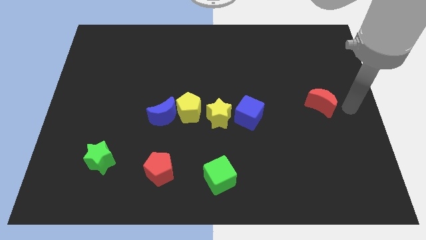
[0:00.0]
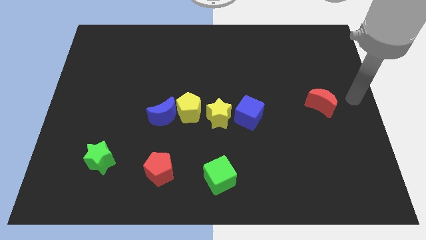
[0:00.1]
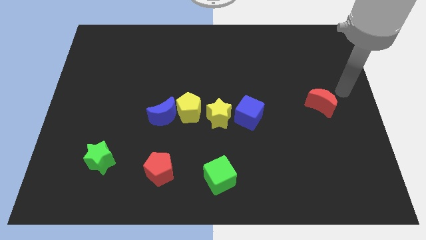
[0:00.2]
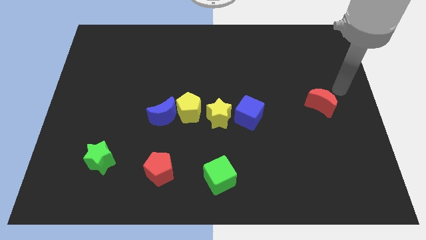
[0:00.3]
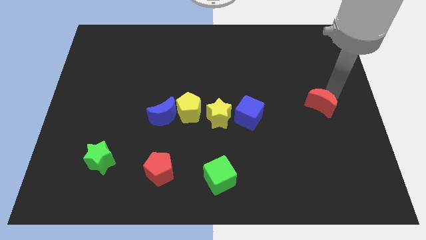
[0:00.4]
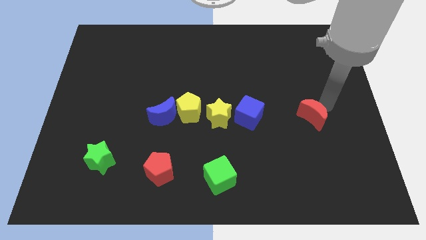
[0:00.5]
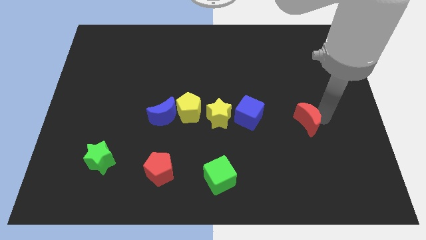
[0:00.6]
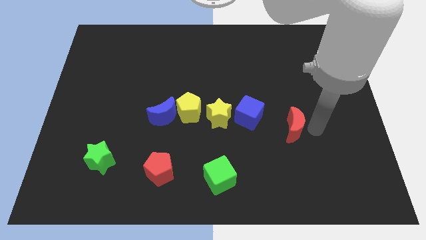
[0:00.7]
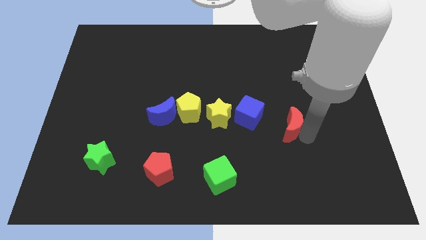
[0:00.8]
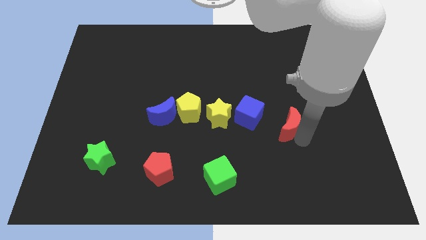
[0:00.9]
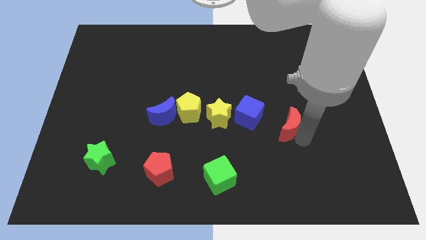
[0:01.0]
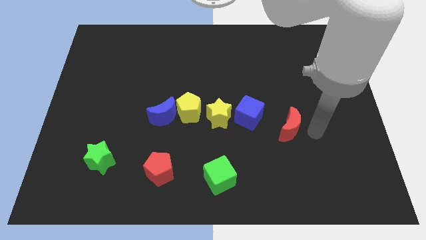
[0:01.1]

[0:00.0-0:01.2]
push the red crescent to the right of the blue cube

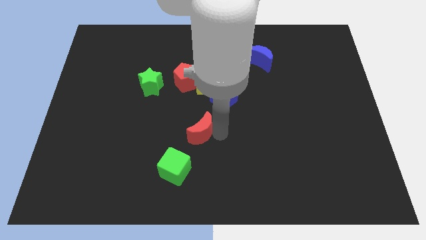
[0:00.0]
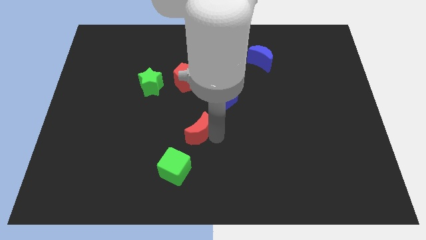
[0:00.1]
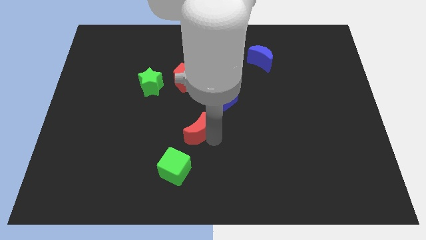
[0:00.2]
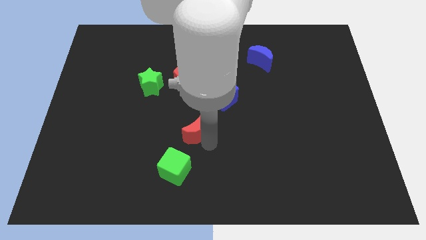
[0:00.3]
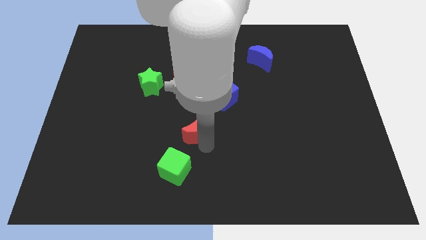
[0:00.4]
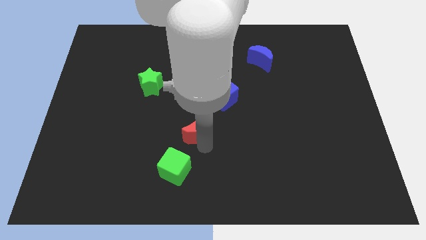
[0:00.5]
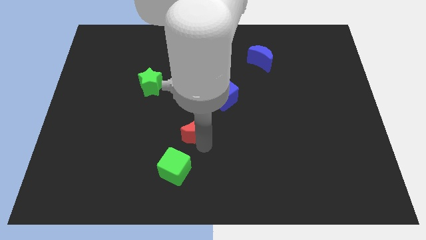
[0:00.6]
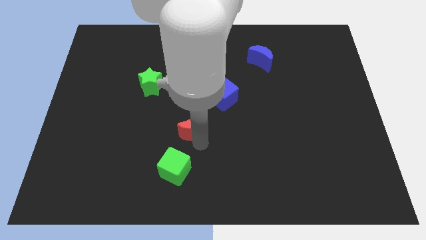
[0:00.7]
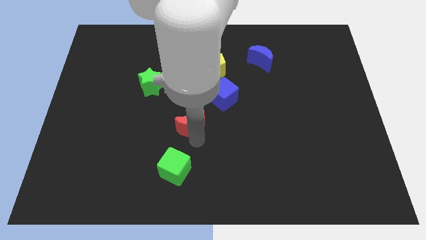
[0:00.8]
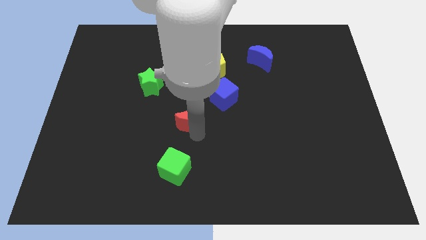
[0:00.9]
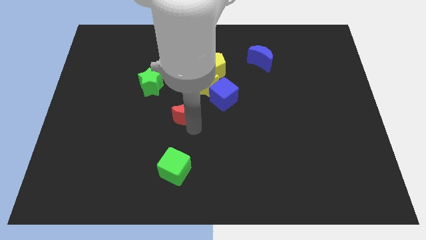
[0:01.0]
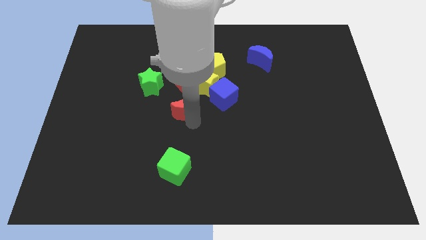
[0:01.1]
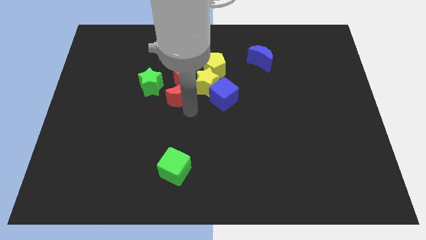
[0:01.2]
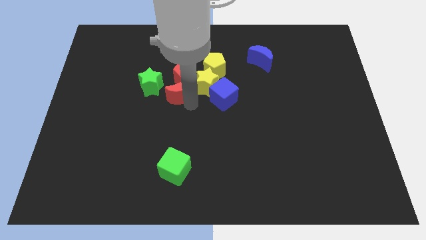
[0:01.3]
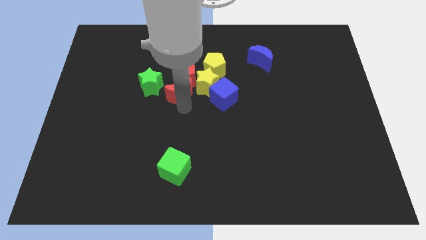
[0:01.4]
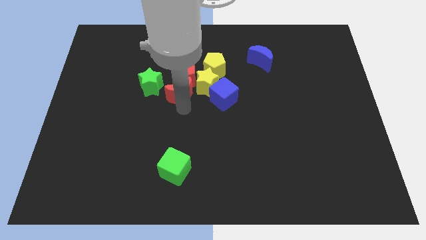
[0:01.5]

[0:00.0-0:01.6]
move the red crescent to the bottom left of the yellow star

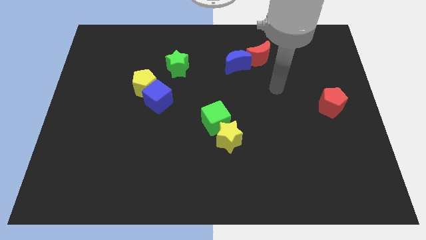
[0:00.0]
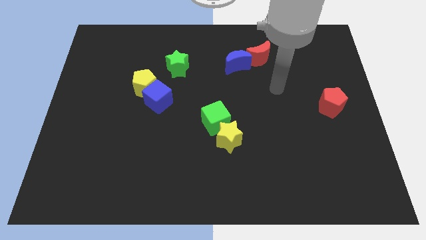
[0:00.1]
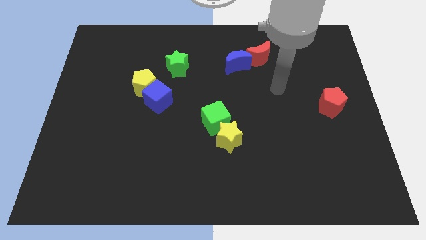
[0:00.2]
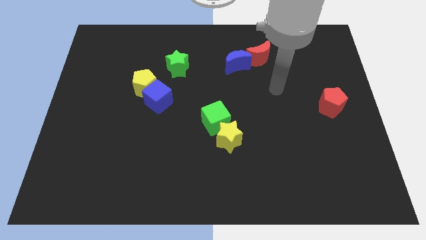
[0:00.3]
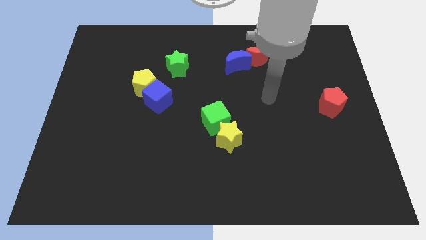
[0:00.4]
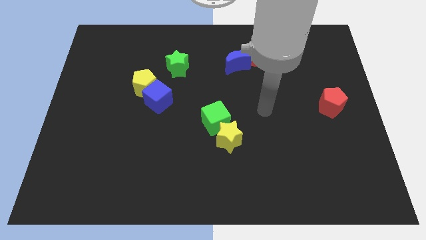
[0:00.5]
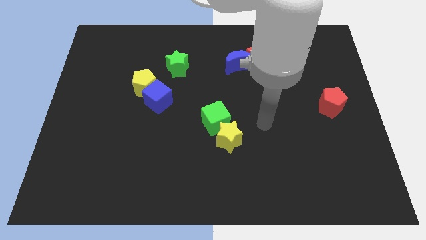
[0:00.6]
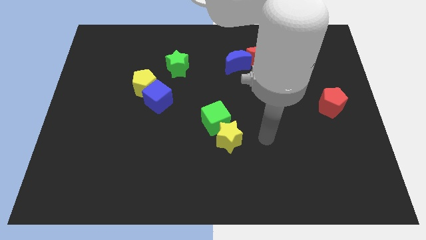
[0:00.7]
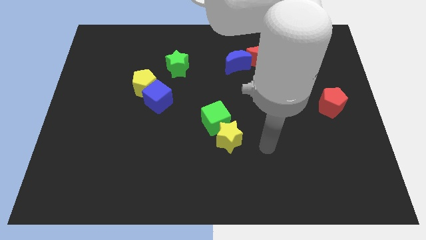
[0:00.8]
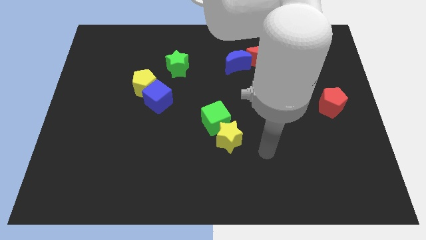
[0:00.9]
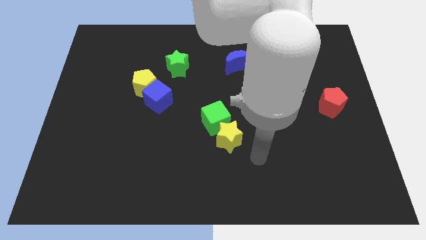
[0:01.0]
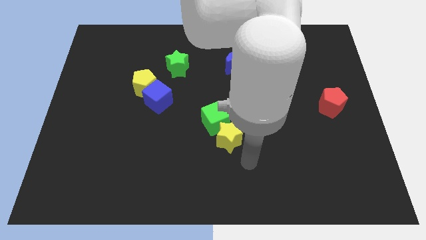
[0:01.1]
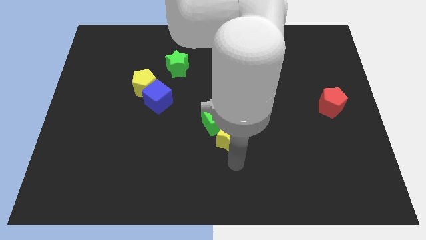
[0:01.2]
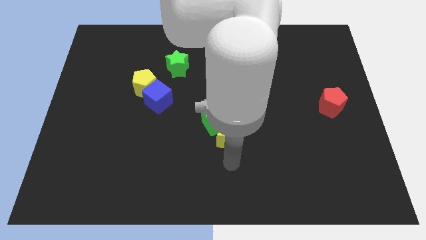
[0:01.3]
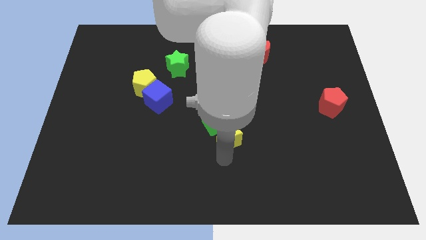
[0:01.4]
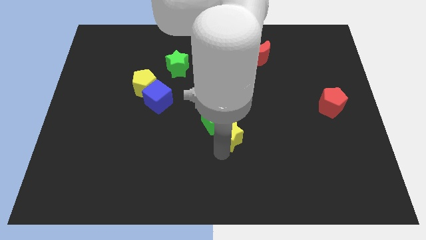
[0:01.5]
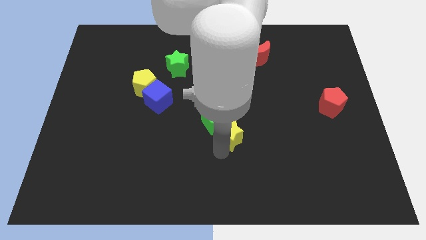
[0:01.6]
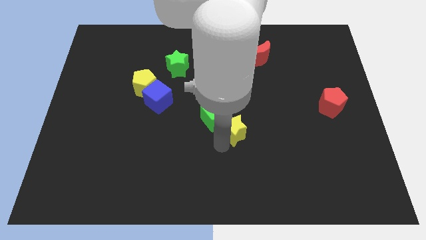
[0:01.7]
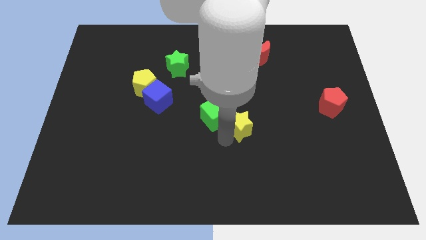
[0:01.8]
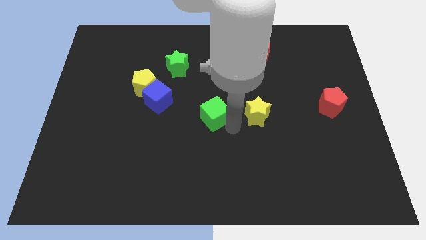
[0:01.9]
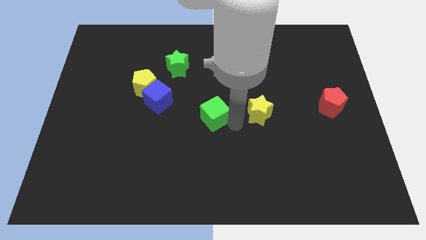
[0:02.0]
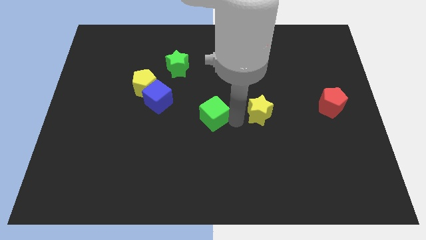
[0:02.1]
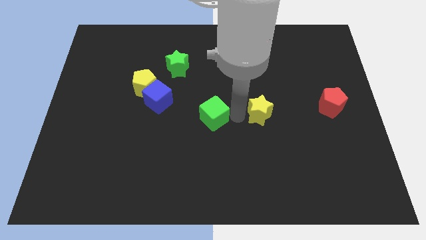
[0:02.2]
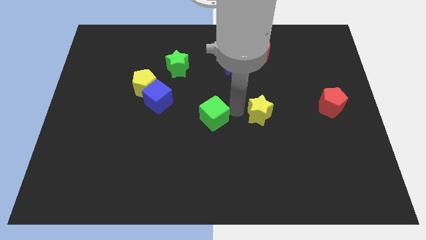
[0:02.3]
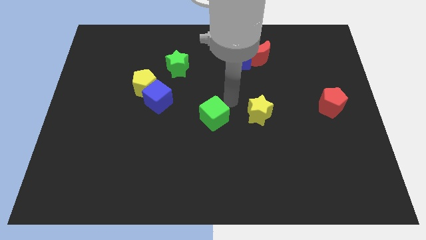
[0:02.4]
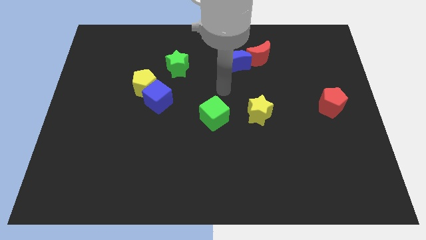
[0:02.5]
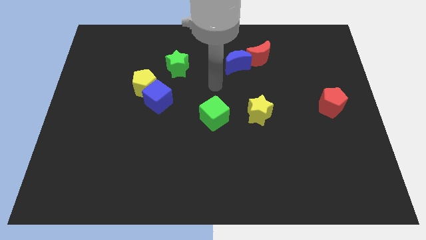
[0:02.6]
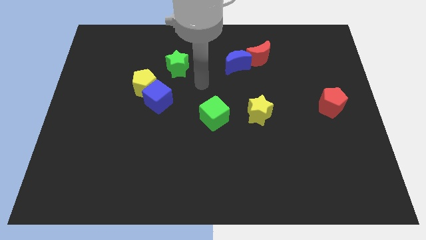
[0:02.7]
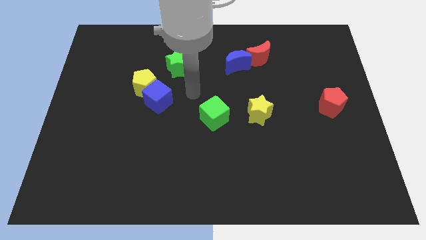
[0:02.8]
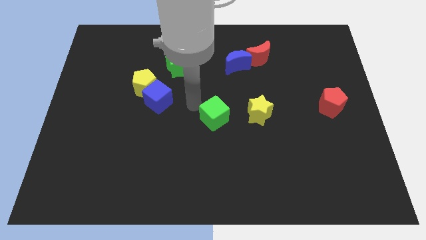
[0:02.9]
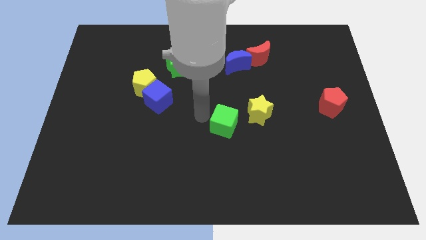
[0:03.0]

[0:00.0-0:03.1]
separate yellow star and green cube

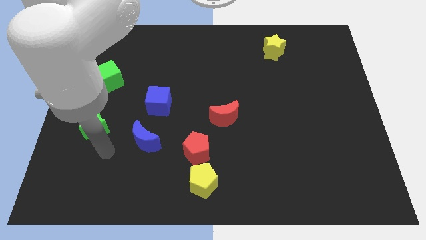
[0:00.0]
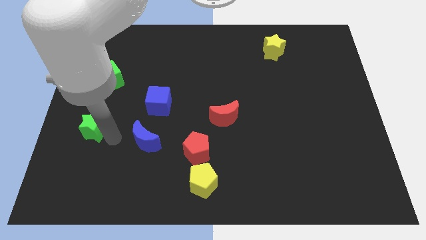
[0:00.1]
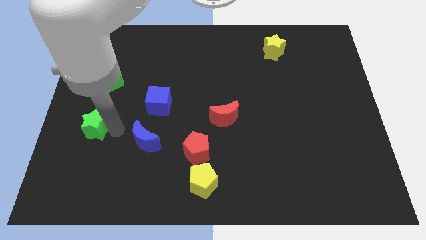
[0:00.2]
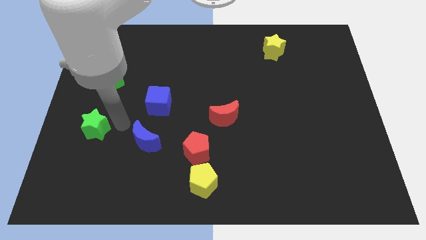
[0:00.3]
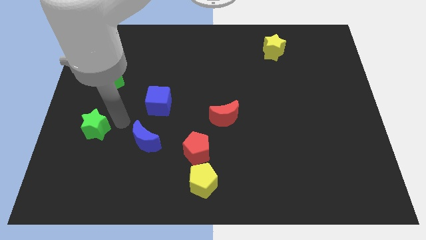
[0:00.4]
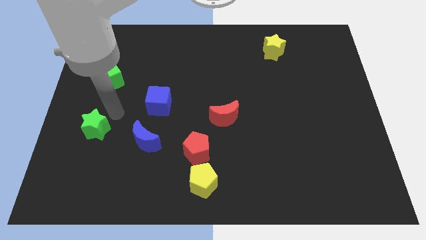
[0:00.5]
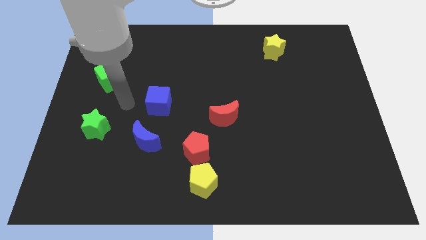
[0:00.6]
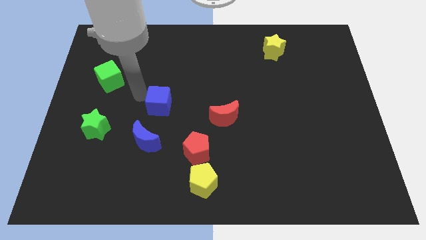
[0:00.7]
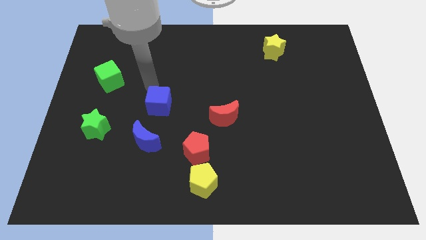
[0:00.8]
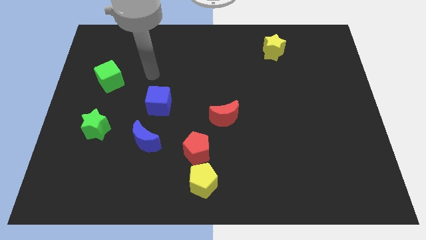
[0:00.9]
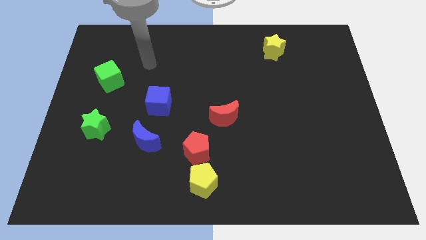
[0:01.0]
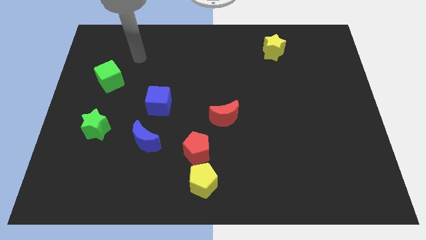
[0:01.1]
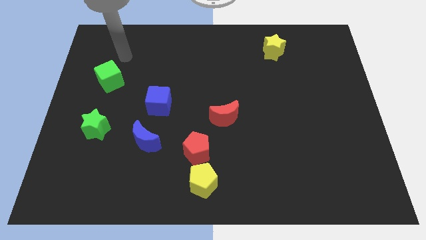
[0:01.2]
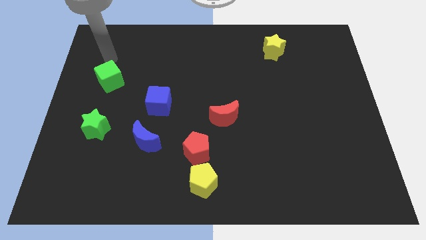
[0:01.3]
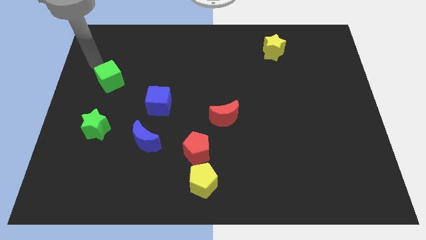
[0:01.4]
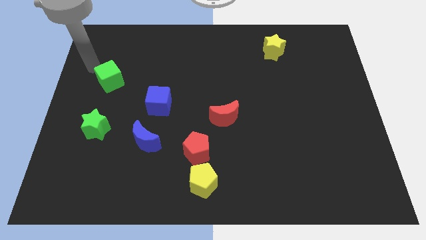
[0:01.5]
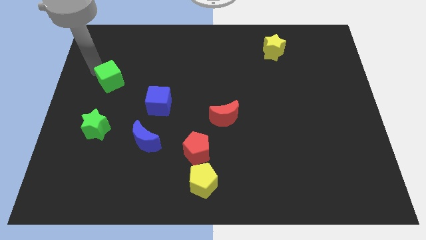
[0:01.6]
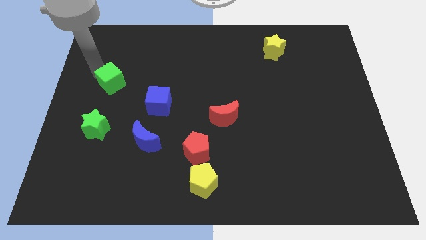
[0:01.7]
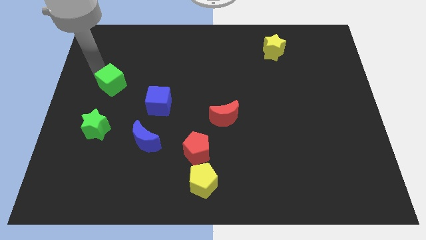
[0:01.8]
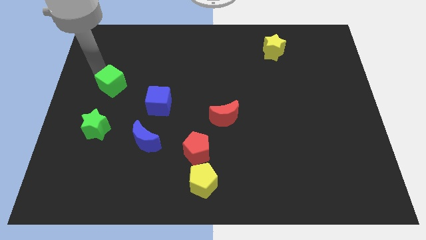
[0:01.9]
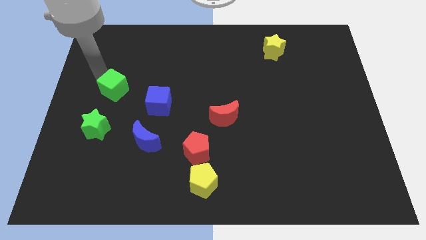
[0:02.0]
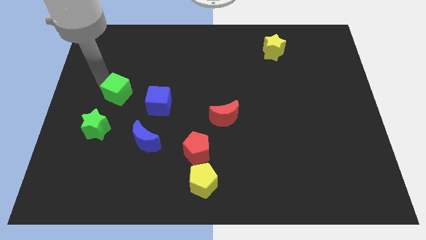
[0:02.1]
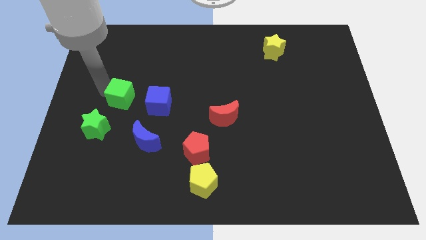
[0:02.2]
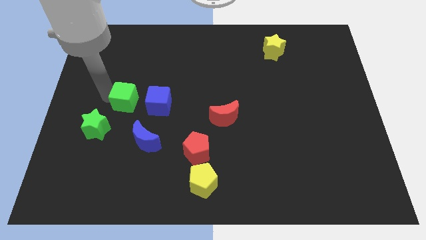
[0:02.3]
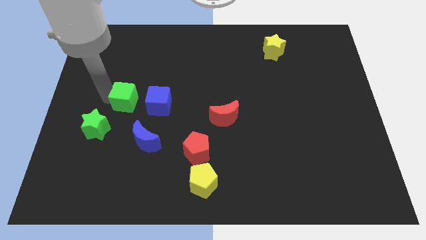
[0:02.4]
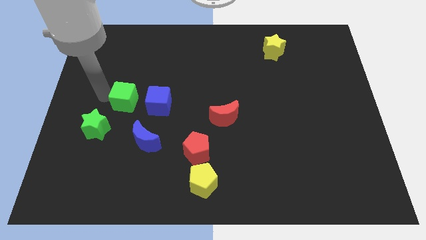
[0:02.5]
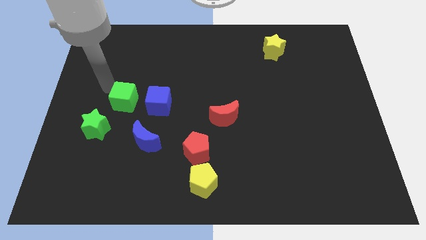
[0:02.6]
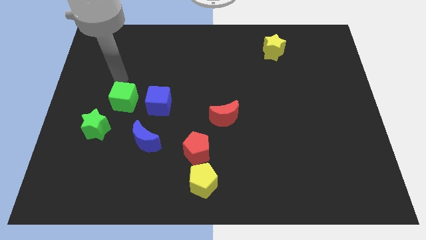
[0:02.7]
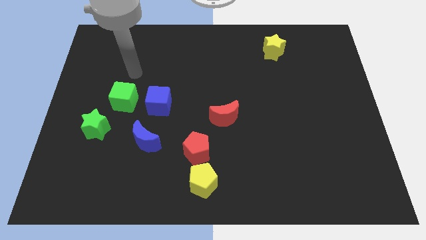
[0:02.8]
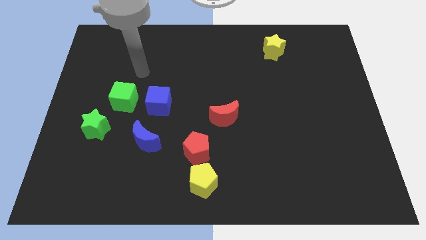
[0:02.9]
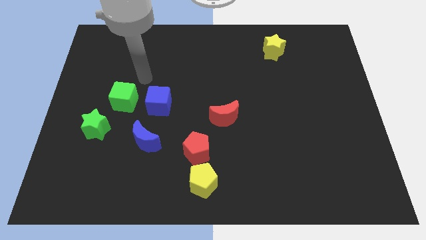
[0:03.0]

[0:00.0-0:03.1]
place green cube parallel to blue cube
